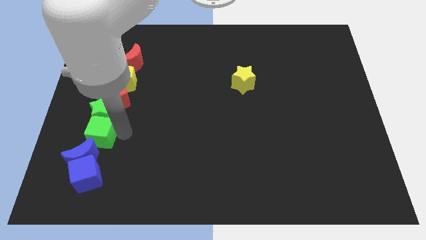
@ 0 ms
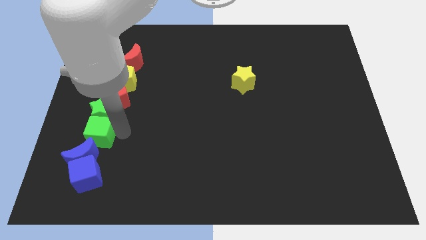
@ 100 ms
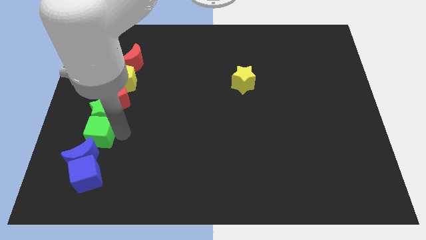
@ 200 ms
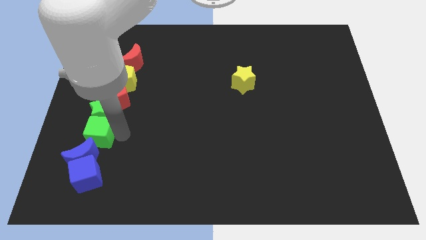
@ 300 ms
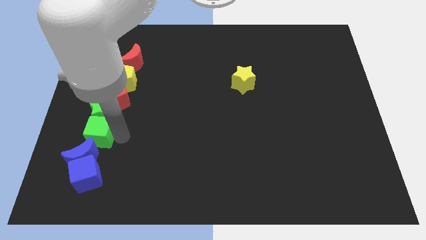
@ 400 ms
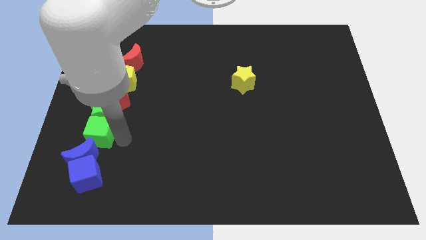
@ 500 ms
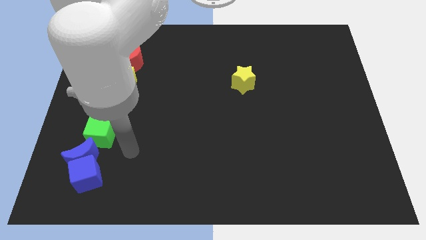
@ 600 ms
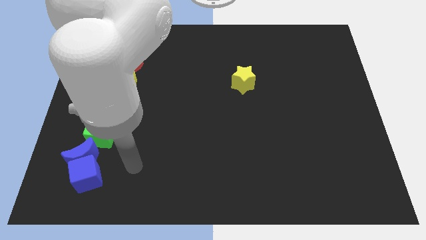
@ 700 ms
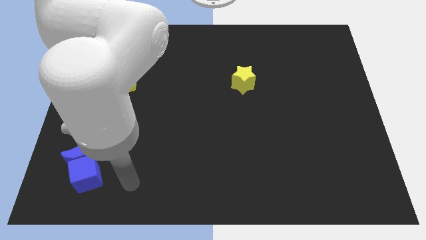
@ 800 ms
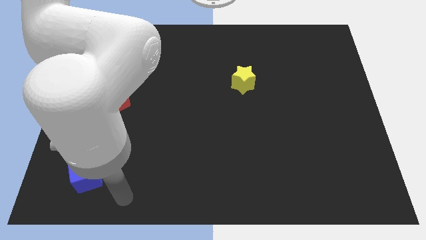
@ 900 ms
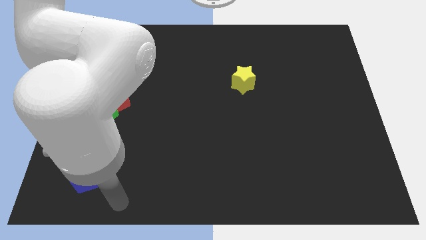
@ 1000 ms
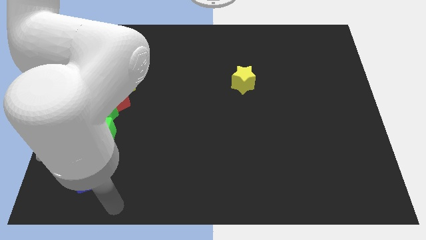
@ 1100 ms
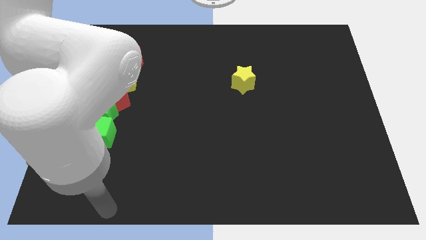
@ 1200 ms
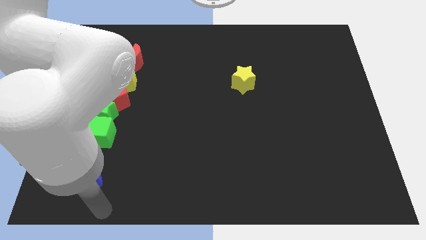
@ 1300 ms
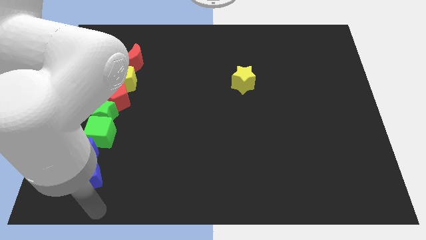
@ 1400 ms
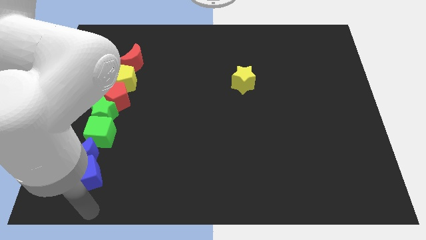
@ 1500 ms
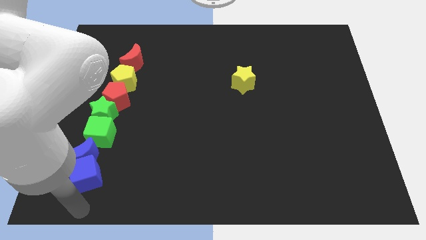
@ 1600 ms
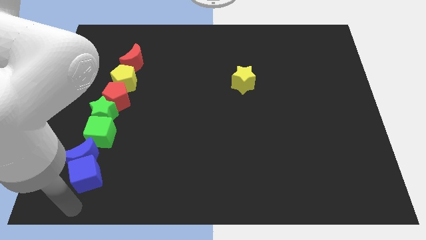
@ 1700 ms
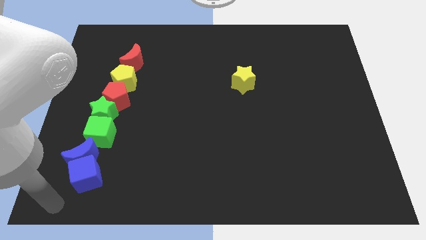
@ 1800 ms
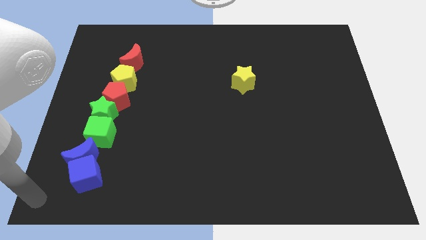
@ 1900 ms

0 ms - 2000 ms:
move the arm around the blue cube

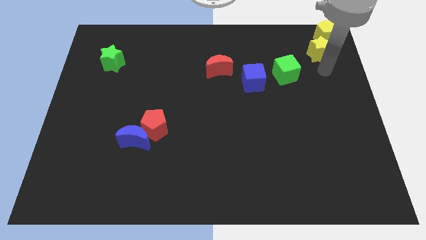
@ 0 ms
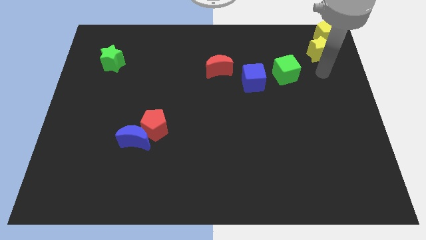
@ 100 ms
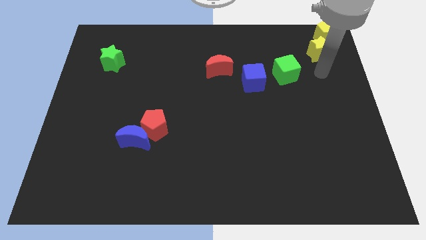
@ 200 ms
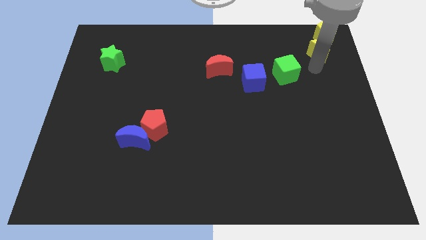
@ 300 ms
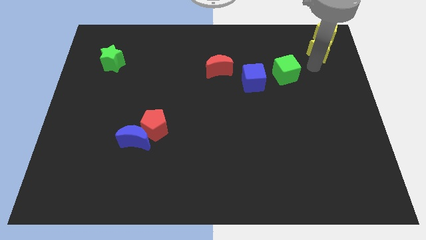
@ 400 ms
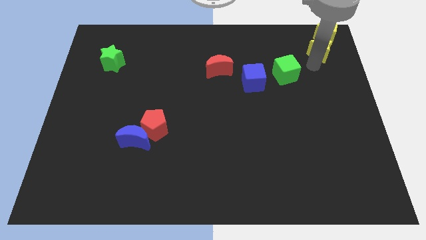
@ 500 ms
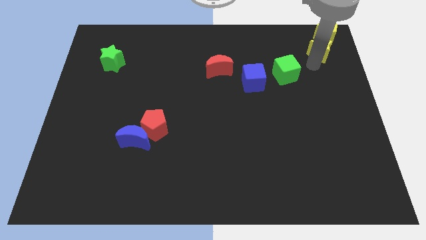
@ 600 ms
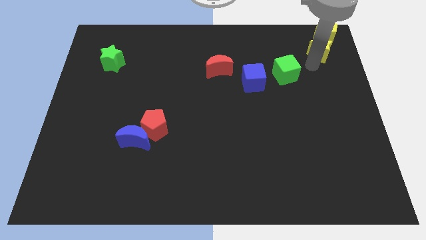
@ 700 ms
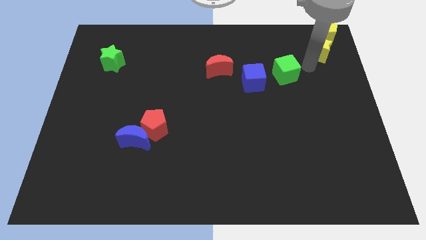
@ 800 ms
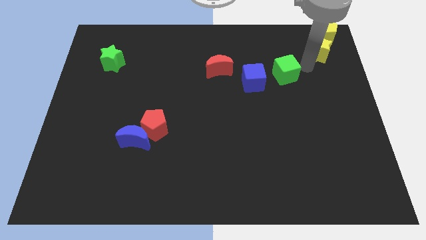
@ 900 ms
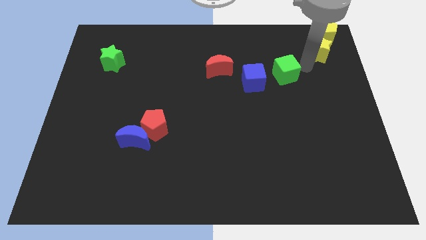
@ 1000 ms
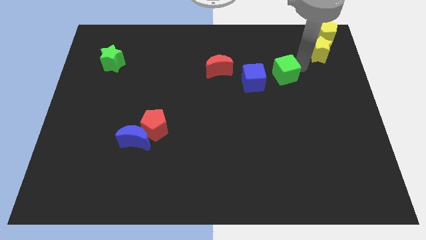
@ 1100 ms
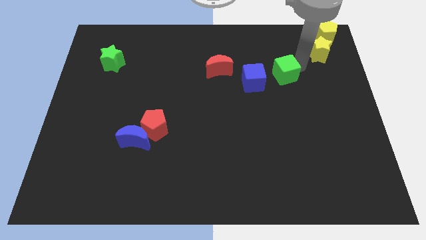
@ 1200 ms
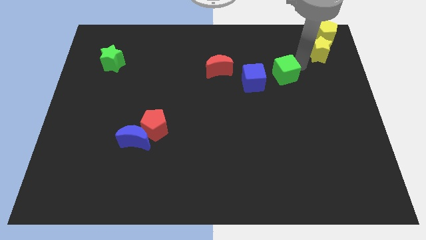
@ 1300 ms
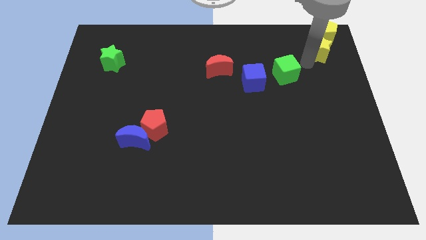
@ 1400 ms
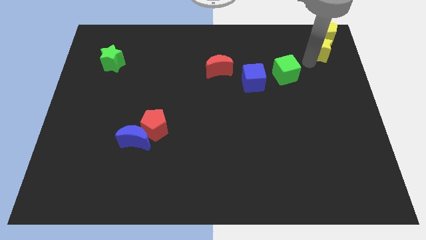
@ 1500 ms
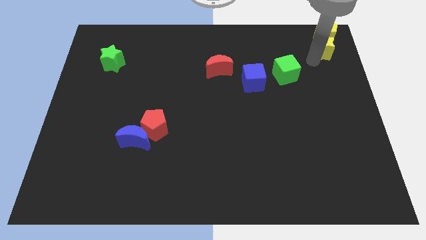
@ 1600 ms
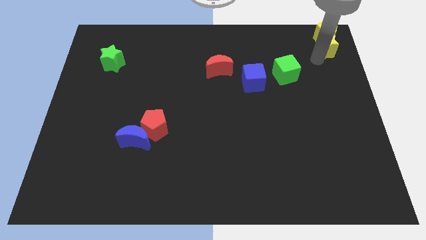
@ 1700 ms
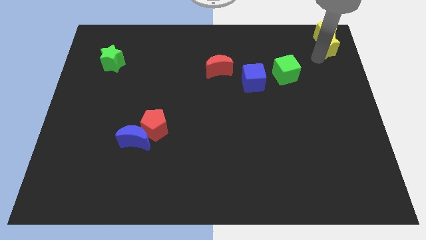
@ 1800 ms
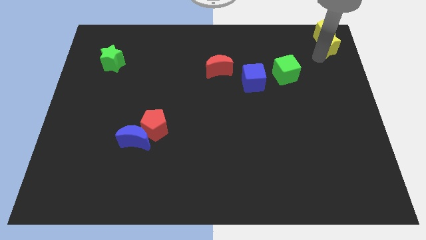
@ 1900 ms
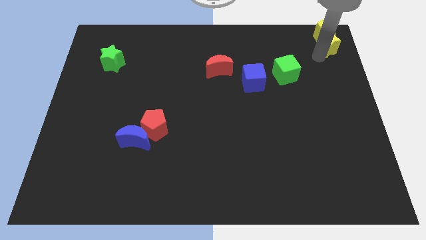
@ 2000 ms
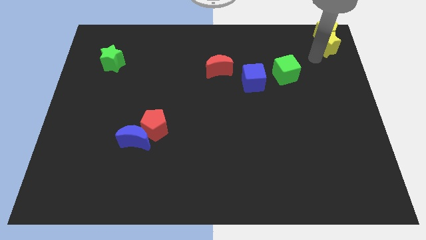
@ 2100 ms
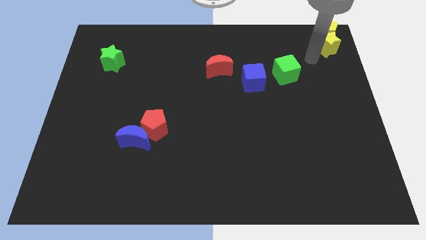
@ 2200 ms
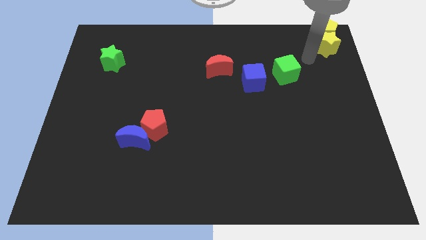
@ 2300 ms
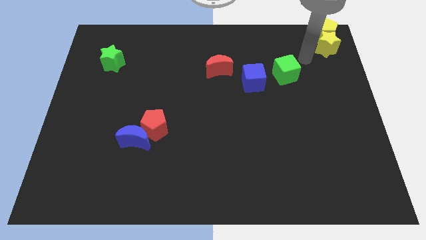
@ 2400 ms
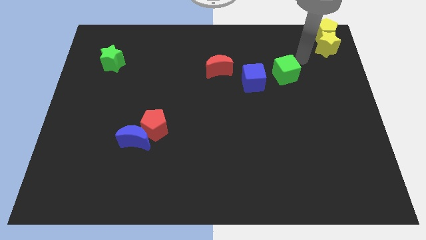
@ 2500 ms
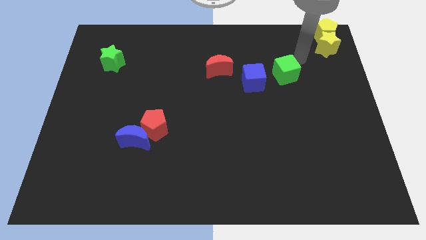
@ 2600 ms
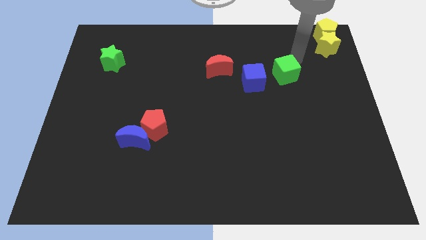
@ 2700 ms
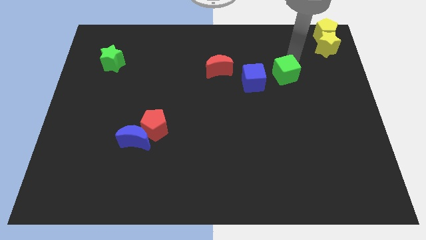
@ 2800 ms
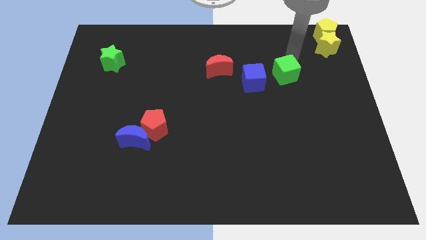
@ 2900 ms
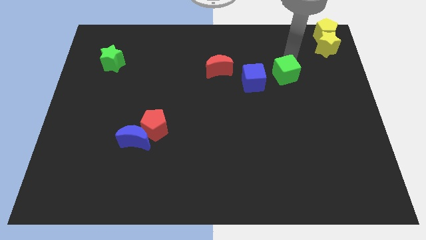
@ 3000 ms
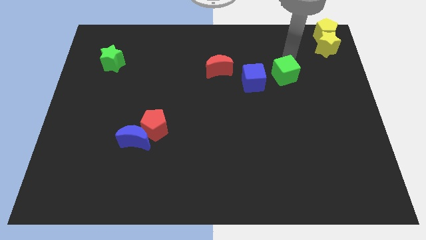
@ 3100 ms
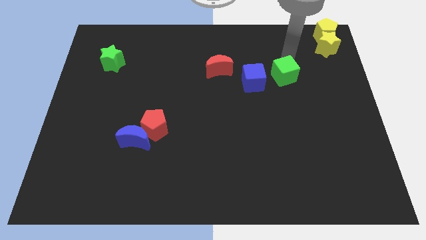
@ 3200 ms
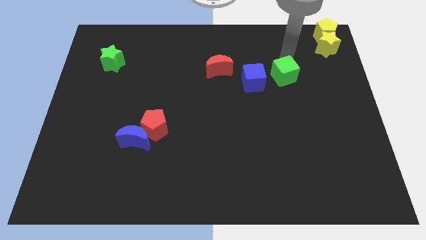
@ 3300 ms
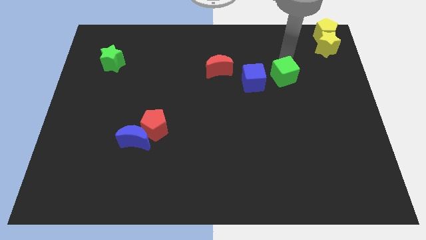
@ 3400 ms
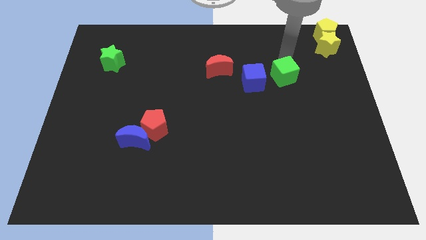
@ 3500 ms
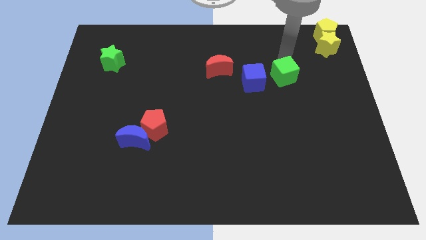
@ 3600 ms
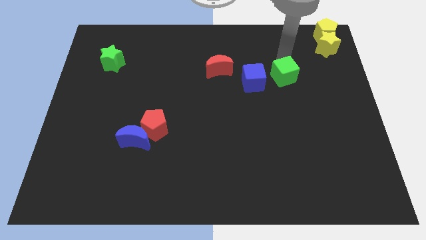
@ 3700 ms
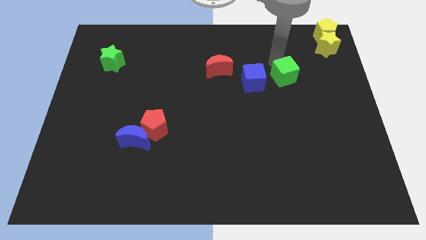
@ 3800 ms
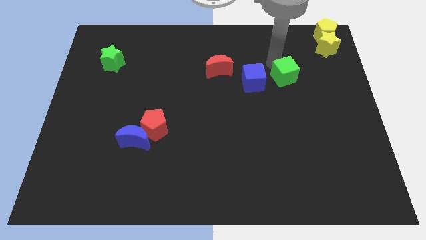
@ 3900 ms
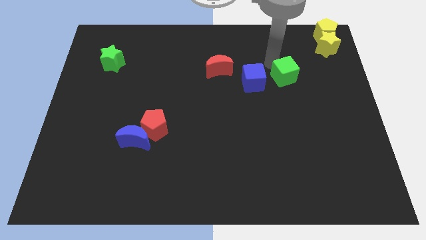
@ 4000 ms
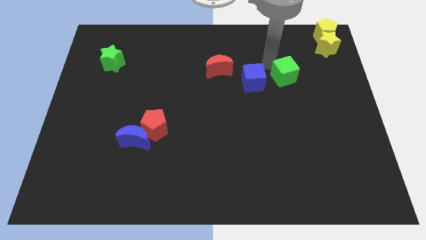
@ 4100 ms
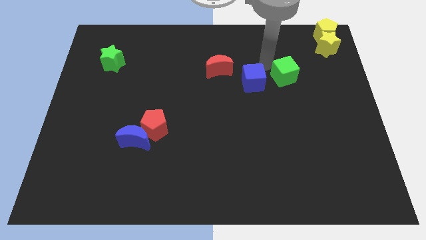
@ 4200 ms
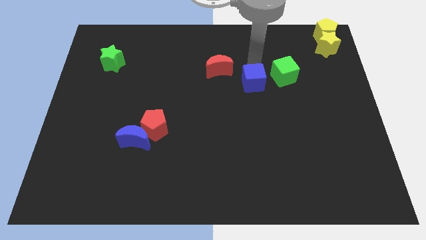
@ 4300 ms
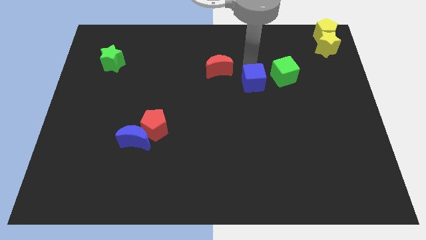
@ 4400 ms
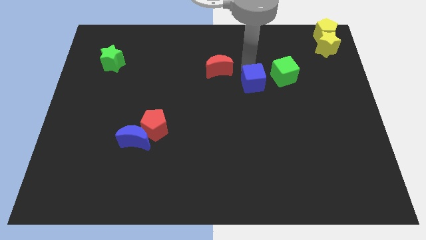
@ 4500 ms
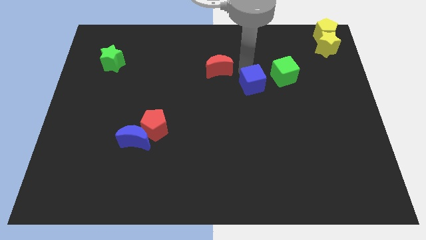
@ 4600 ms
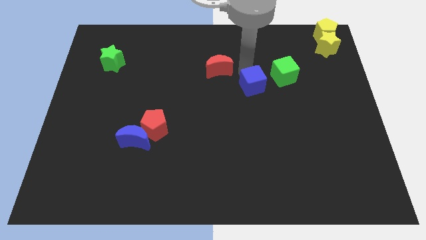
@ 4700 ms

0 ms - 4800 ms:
go near blue cube

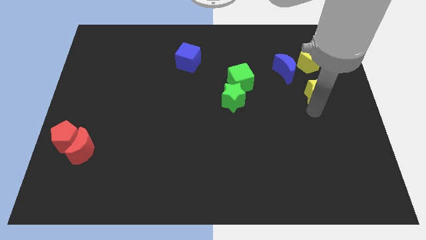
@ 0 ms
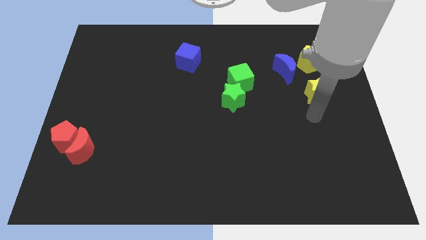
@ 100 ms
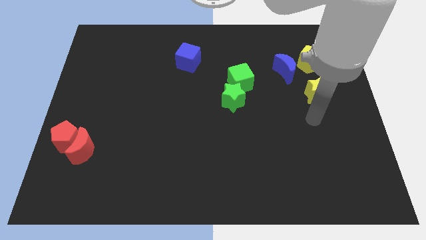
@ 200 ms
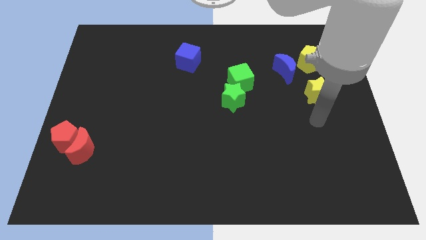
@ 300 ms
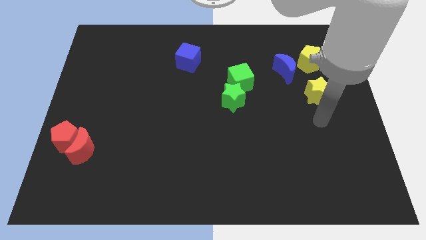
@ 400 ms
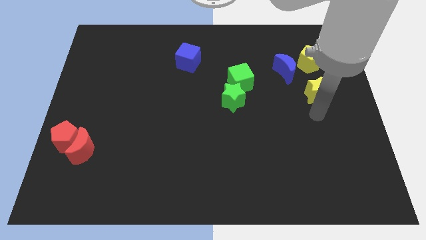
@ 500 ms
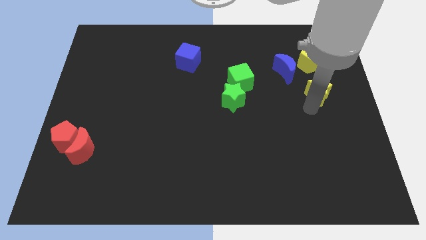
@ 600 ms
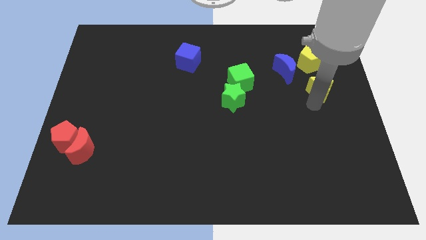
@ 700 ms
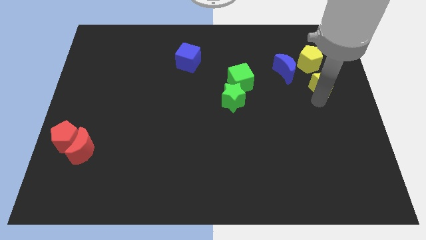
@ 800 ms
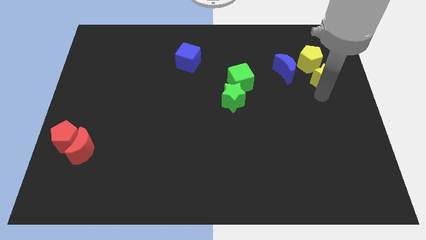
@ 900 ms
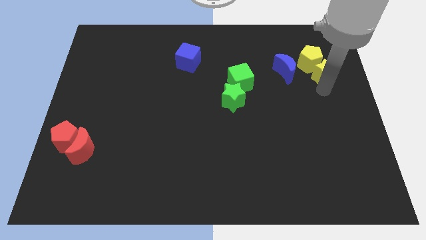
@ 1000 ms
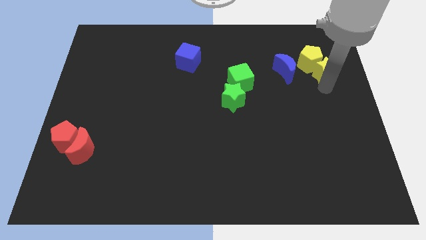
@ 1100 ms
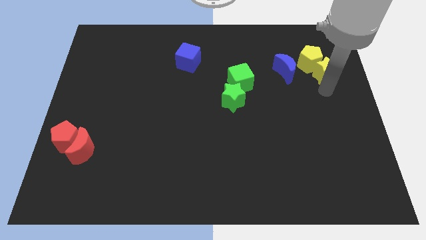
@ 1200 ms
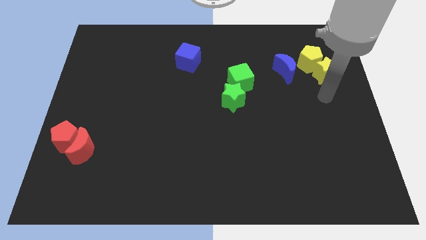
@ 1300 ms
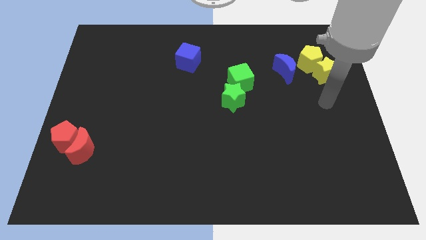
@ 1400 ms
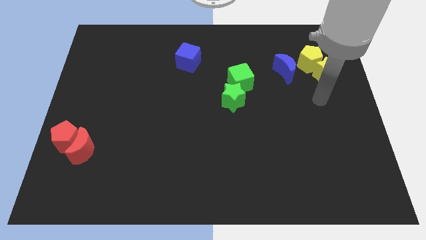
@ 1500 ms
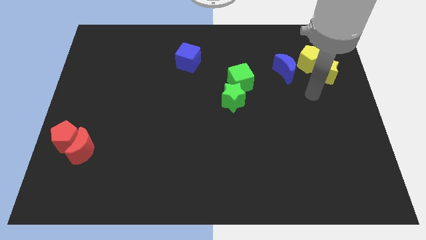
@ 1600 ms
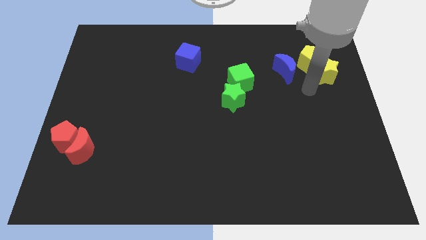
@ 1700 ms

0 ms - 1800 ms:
move the yellow star to the bottom right of the yellow pentagon

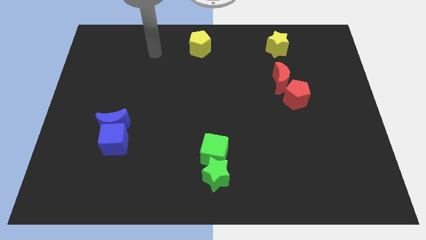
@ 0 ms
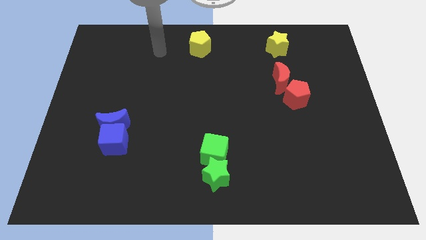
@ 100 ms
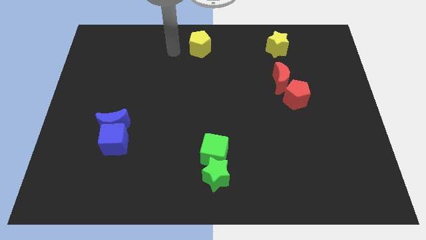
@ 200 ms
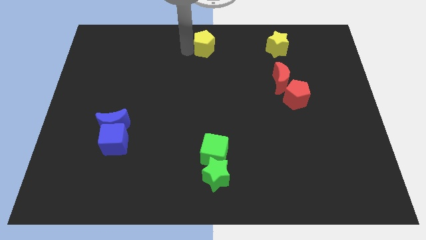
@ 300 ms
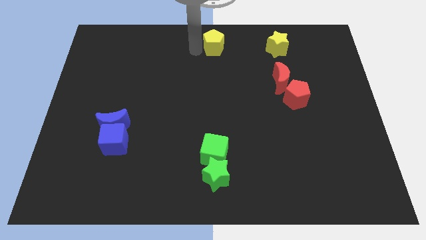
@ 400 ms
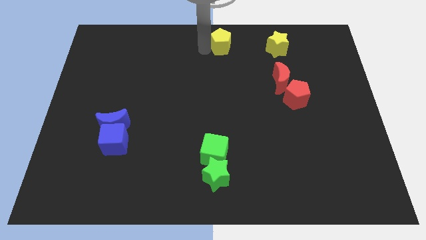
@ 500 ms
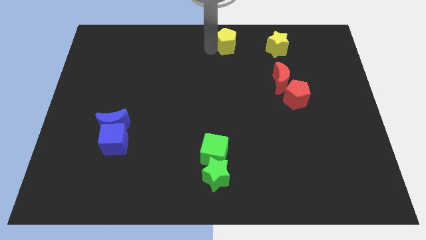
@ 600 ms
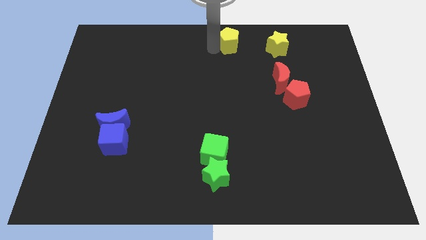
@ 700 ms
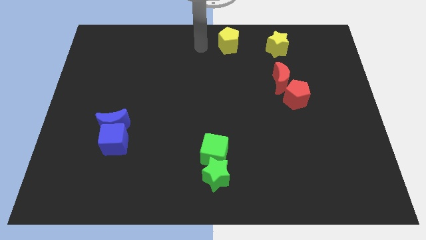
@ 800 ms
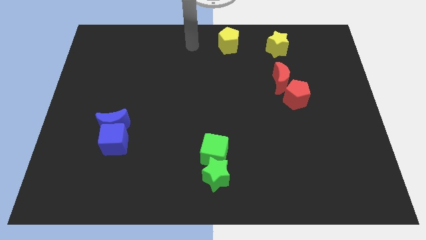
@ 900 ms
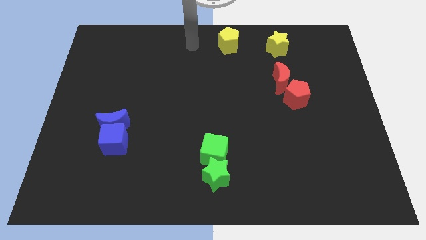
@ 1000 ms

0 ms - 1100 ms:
push the yellow pentagon closer to the yellow star
